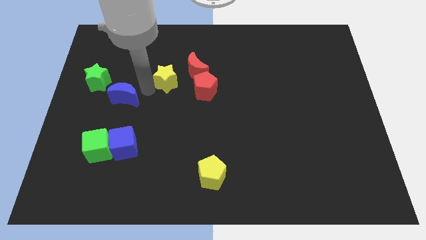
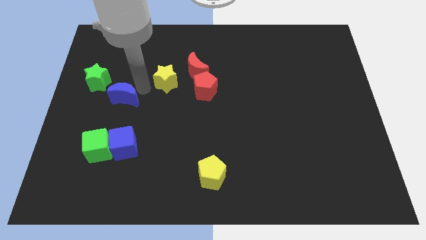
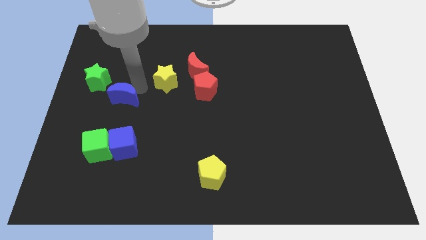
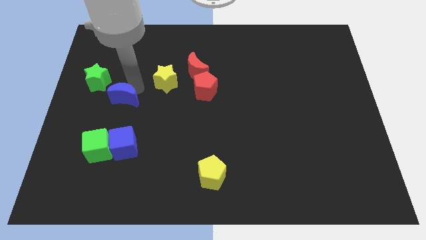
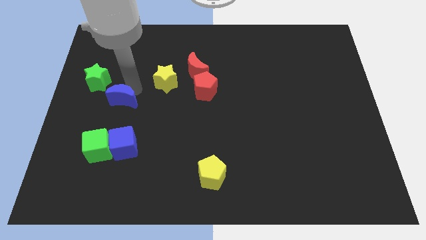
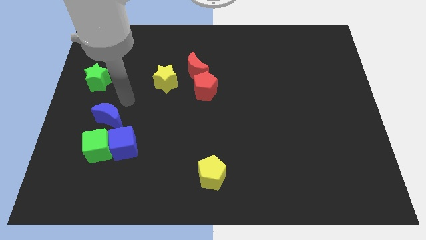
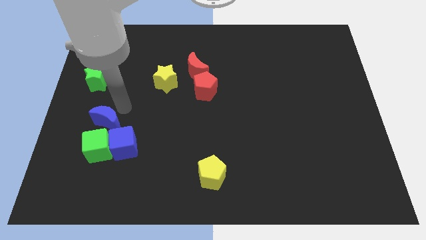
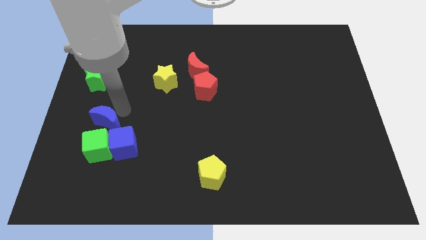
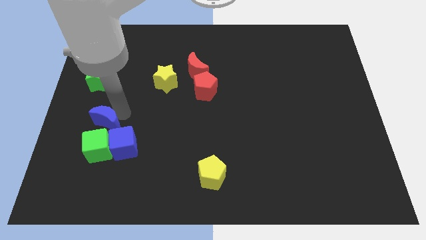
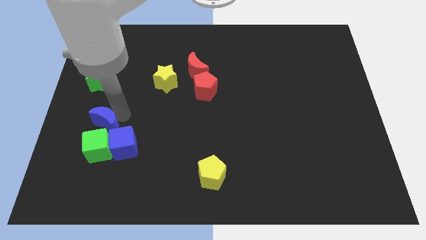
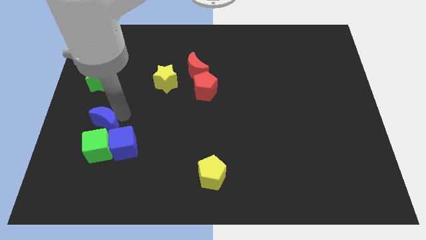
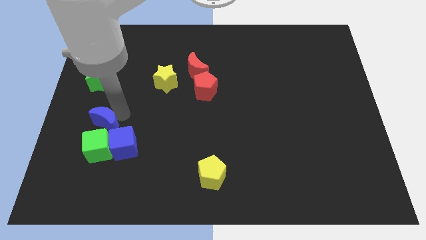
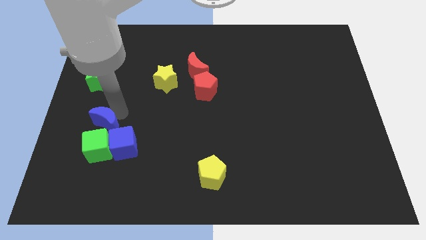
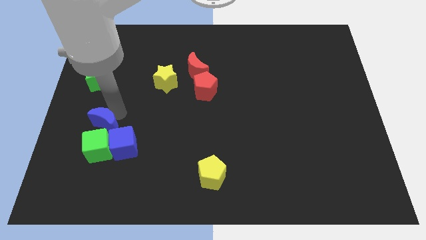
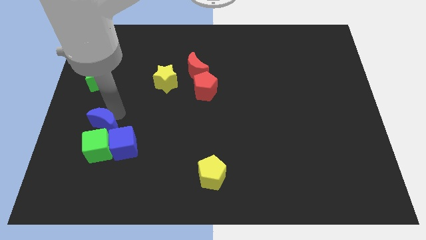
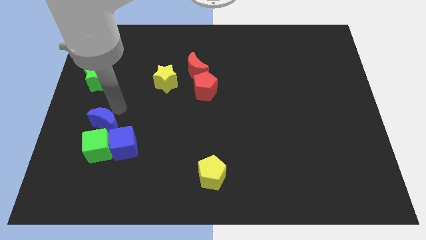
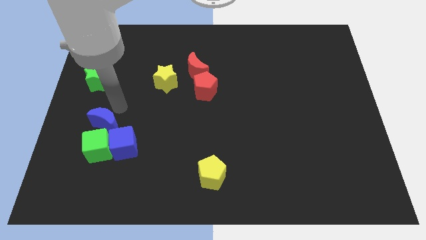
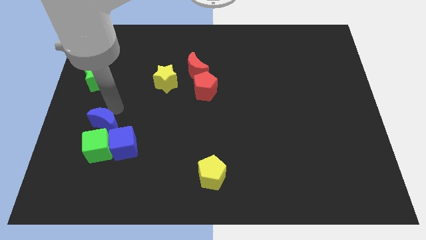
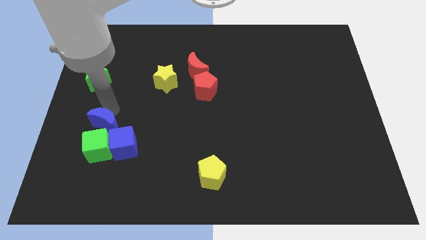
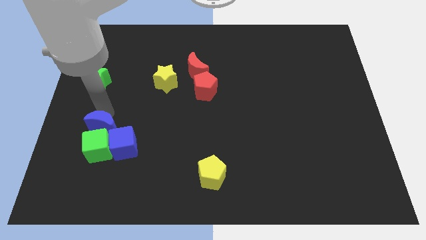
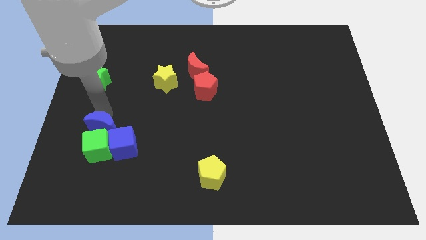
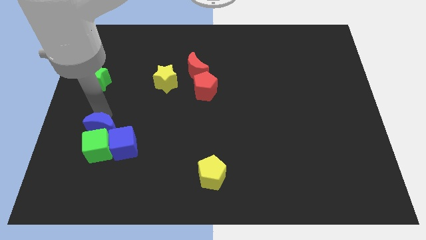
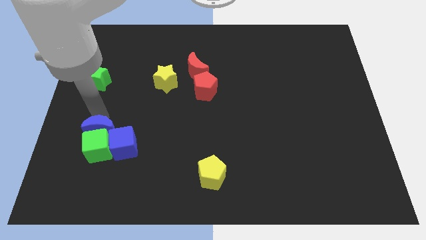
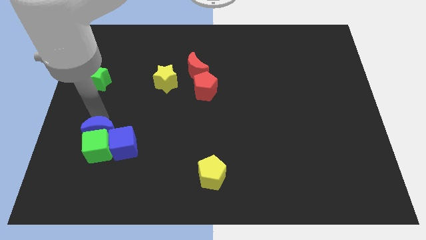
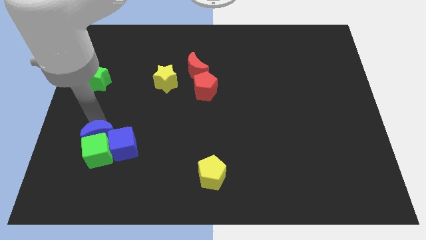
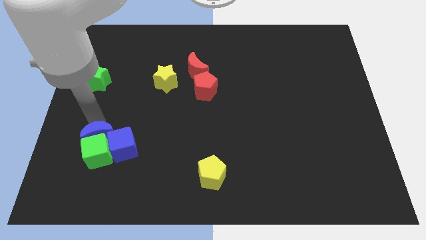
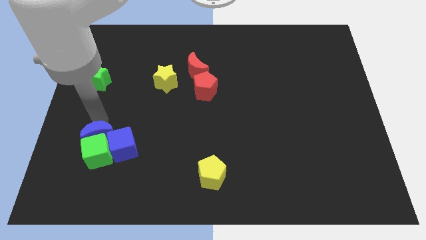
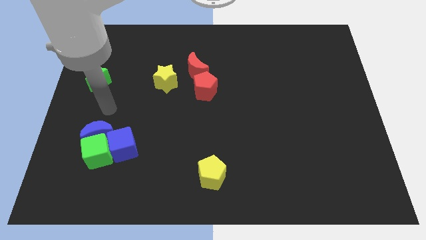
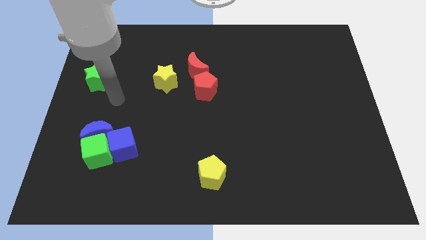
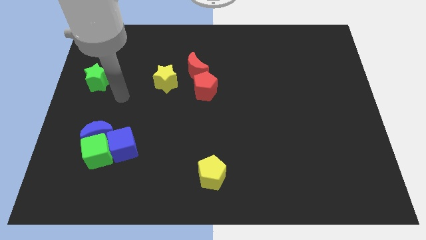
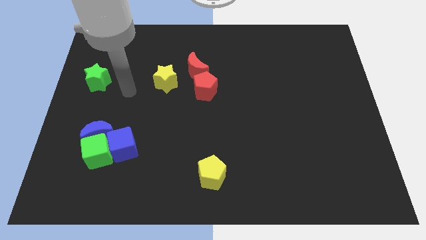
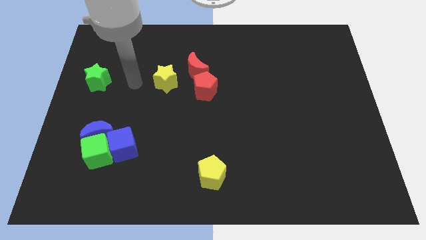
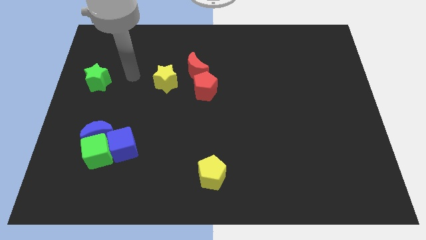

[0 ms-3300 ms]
push the blue moon towards the green cube

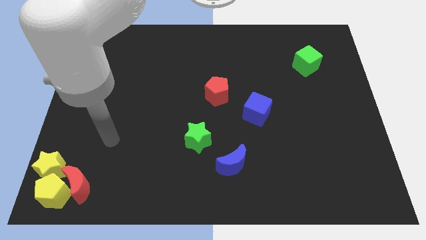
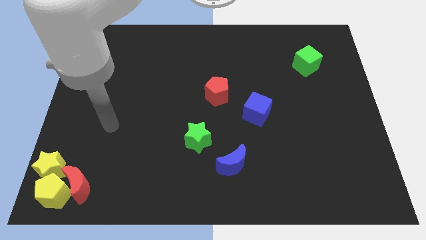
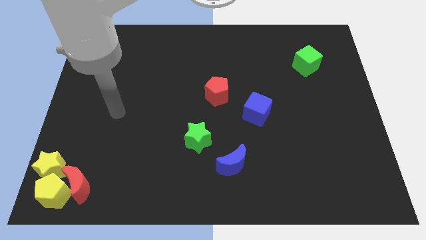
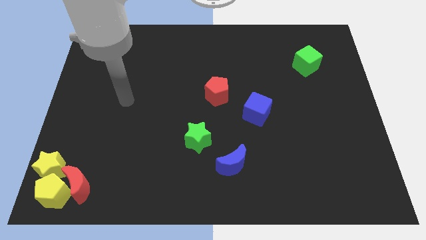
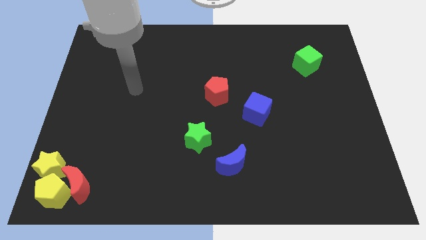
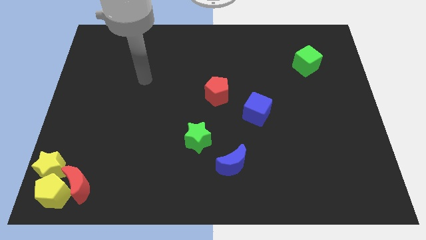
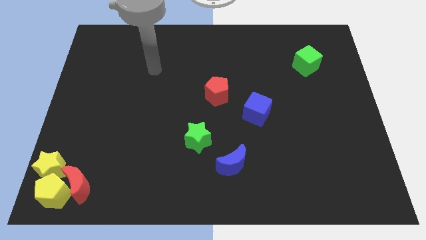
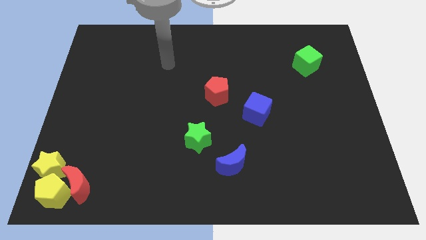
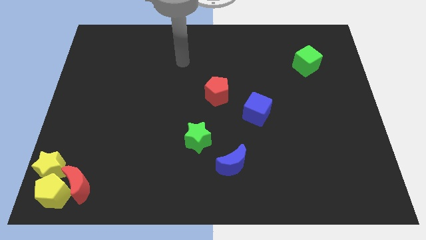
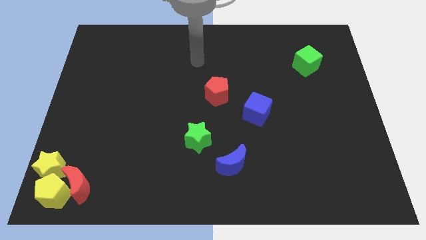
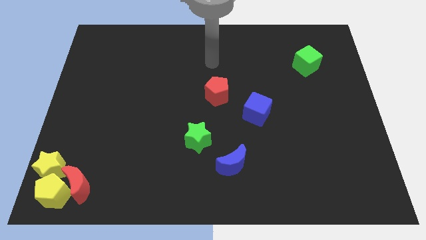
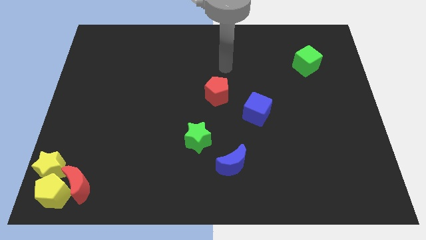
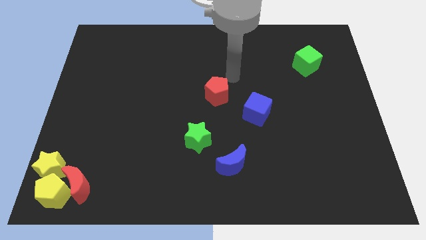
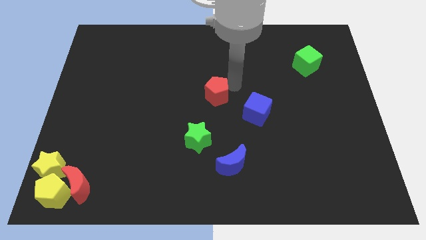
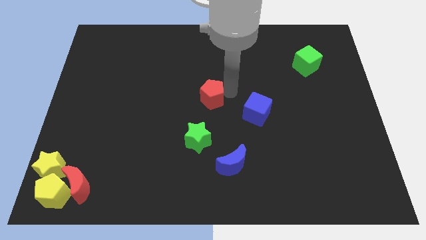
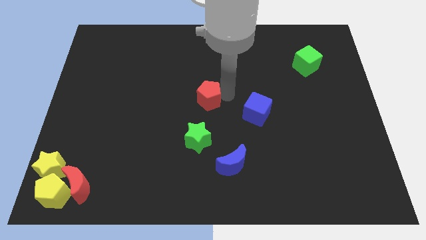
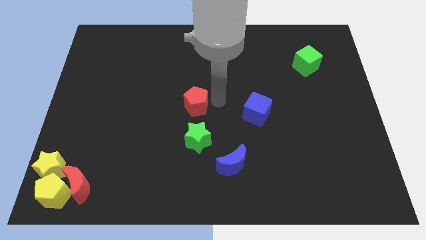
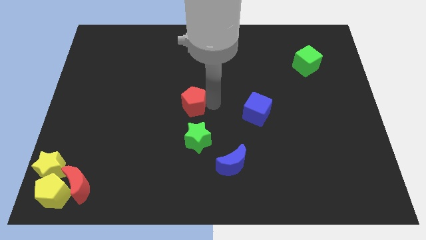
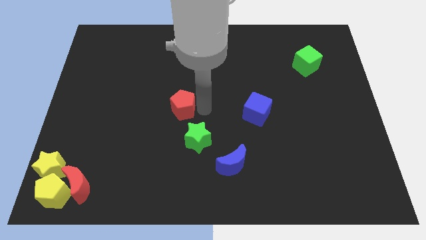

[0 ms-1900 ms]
put the red pentagon vertically above the green star

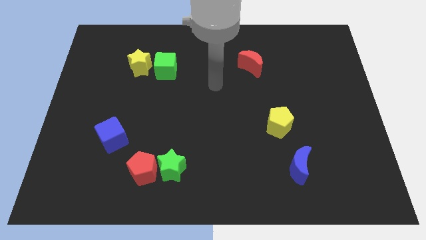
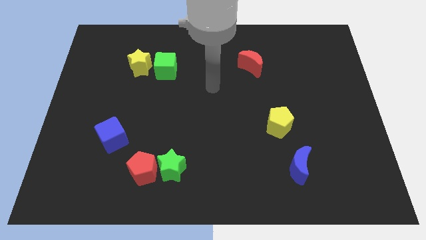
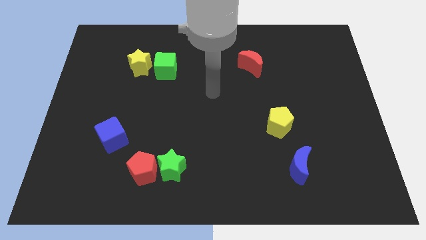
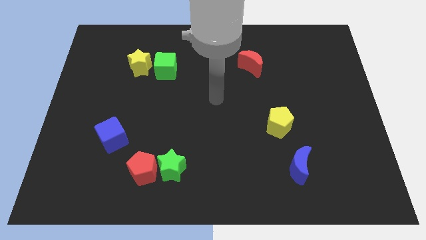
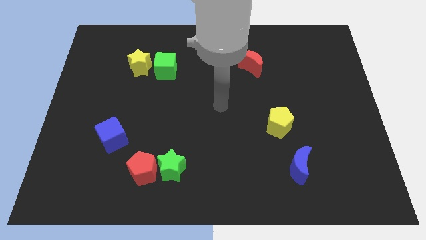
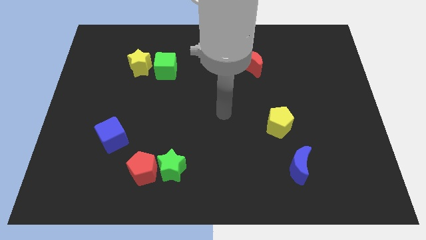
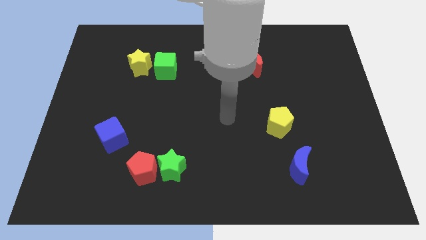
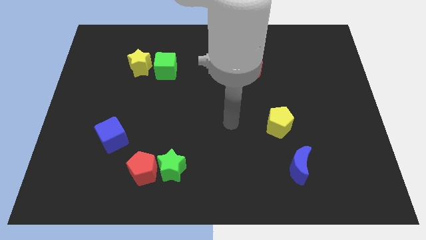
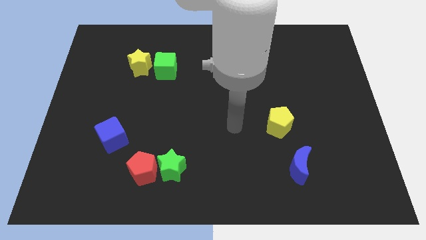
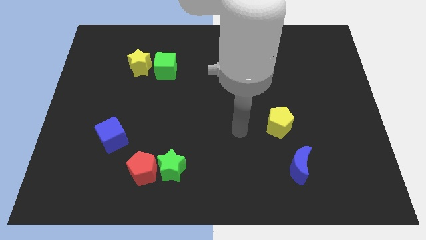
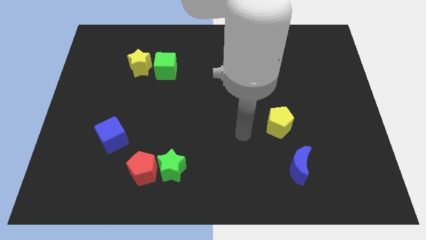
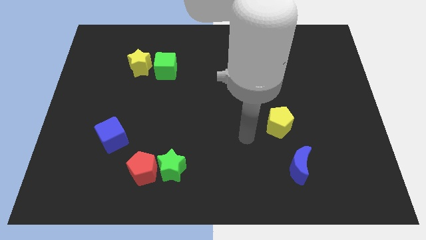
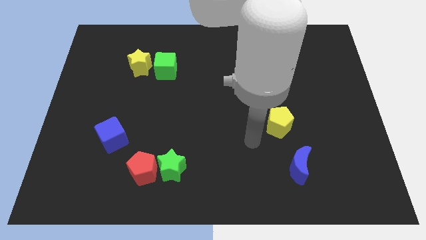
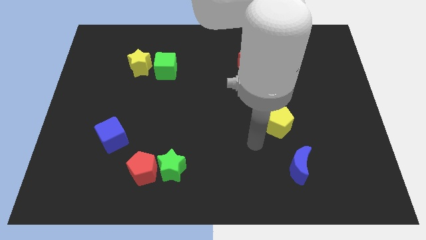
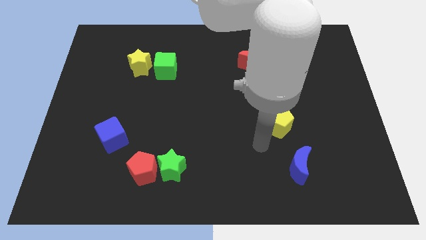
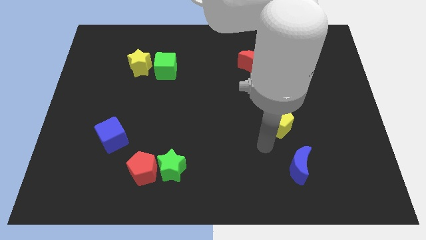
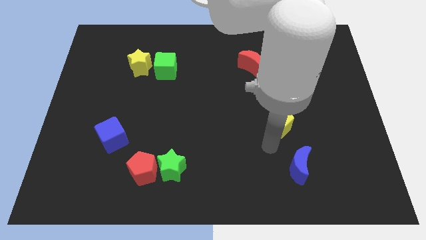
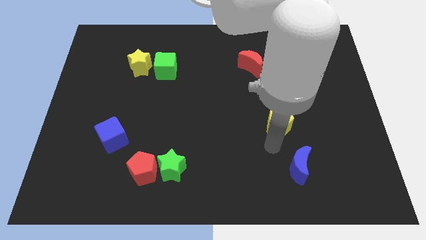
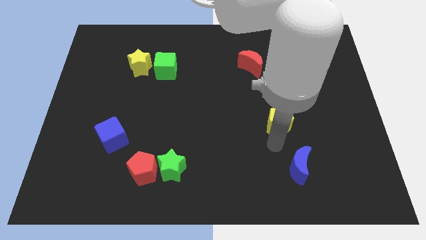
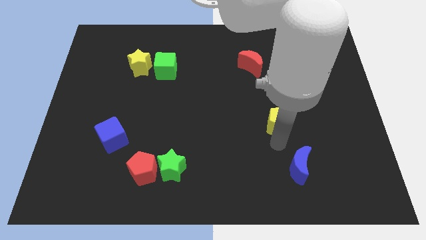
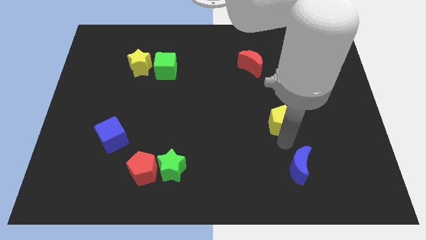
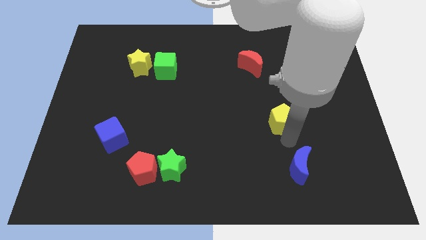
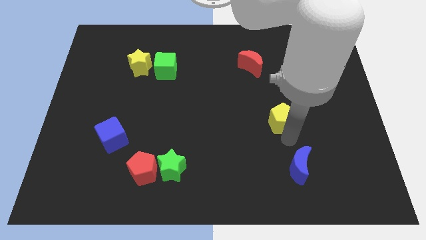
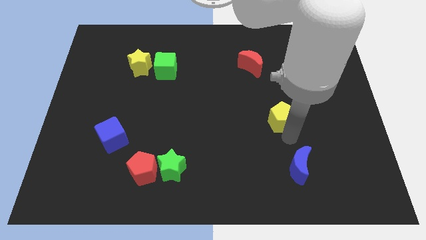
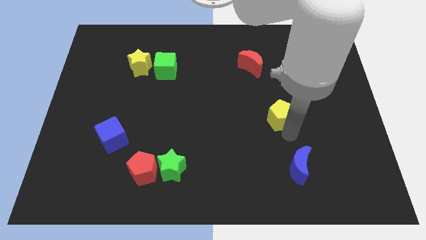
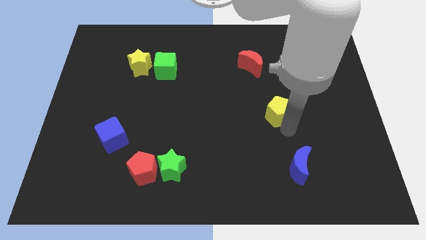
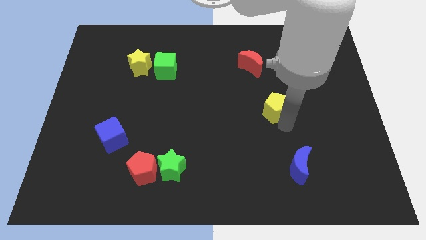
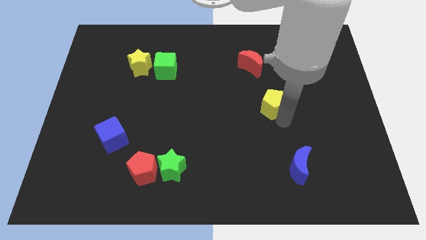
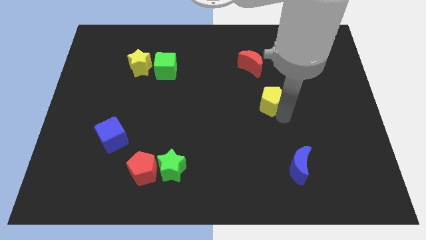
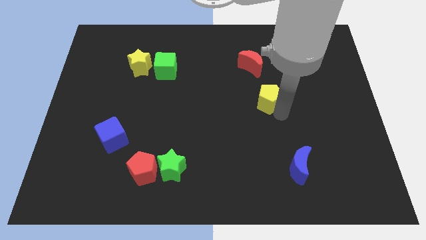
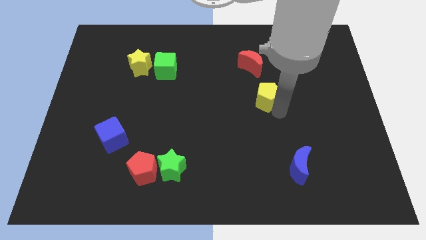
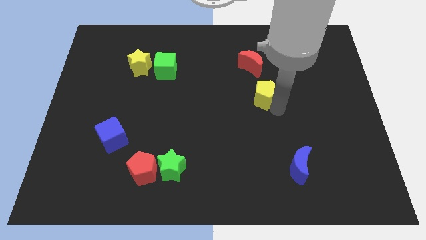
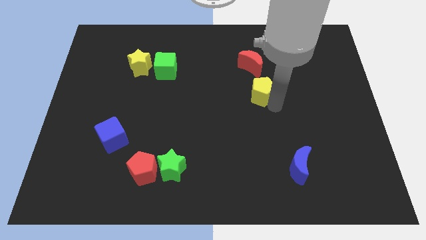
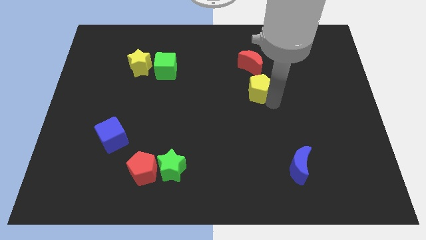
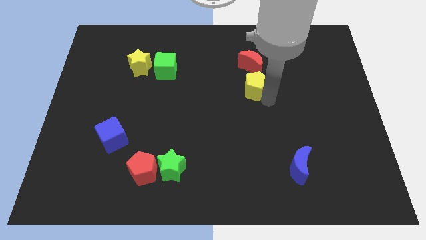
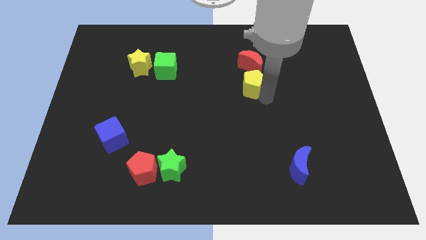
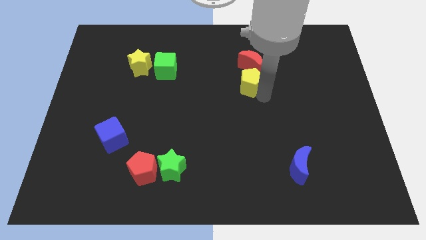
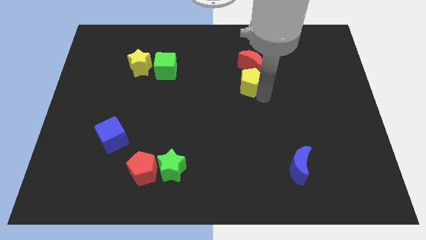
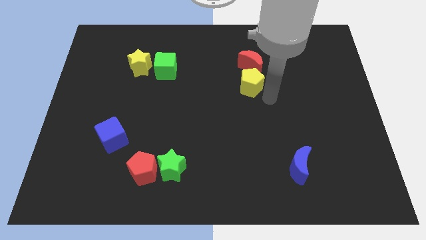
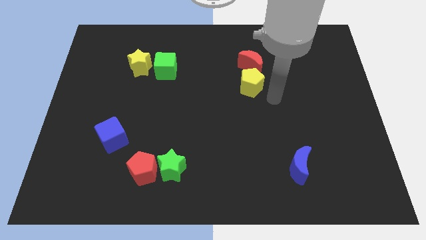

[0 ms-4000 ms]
place the yellow pentagon at the bottom of the red moon
